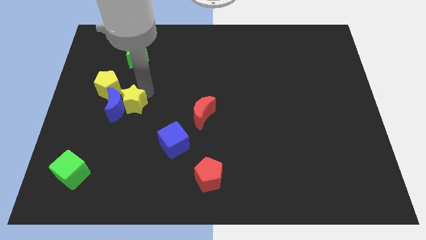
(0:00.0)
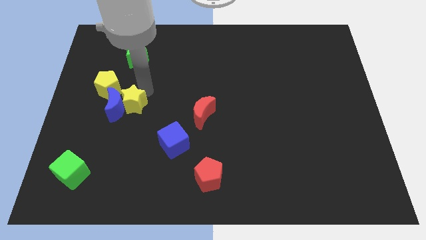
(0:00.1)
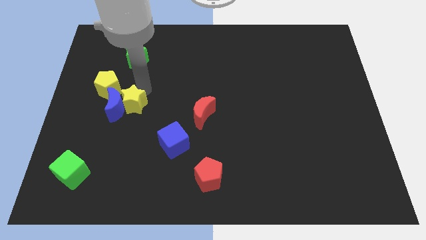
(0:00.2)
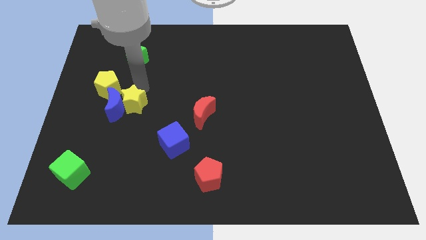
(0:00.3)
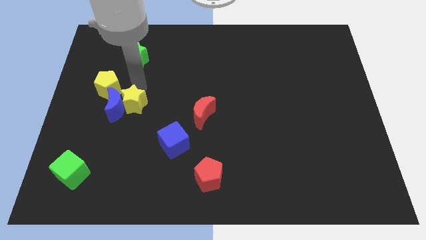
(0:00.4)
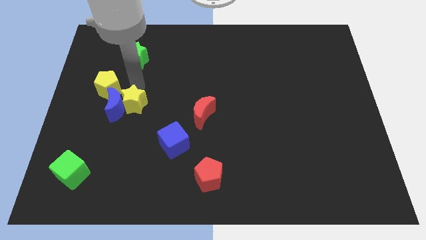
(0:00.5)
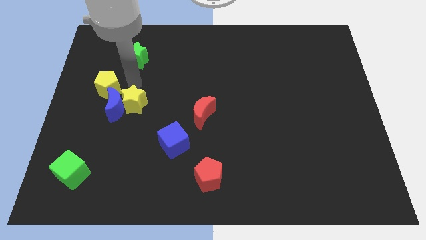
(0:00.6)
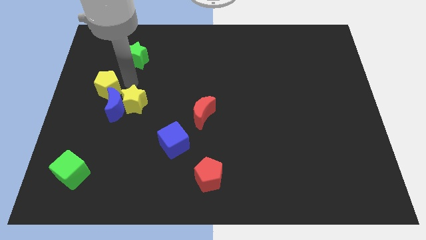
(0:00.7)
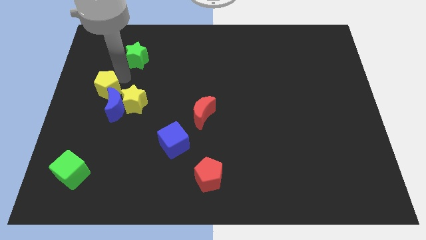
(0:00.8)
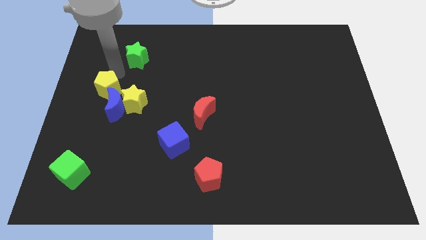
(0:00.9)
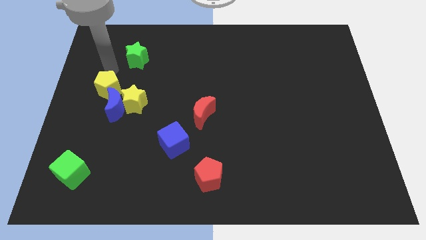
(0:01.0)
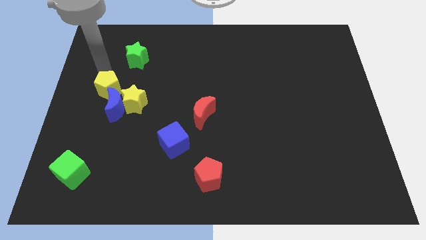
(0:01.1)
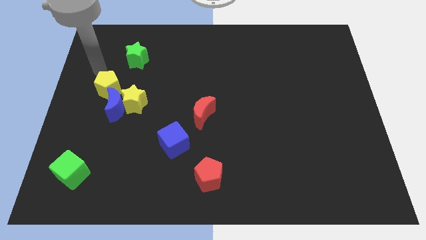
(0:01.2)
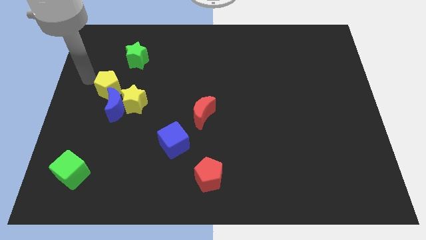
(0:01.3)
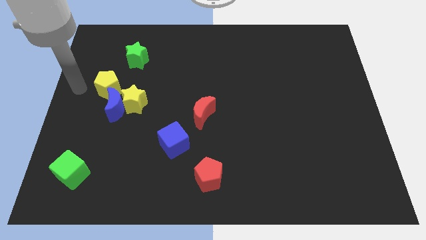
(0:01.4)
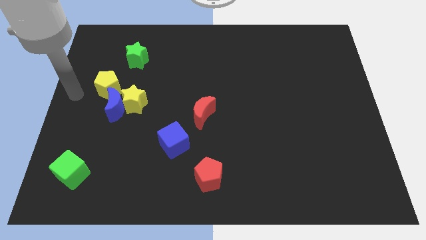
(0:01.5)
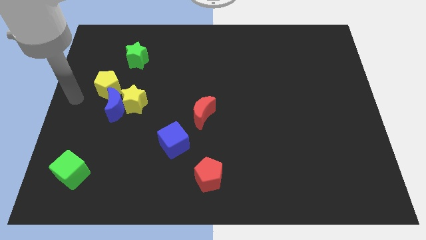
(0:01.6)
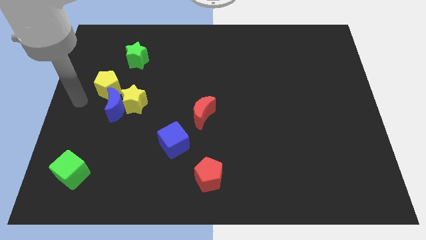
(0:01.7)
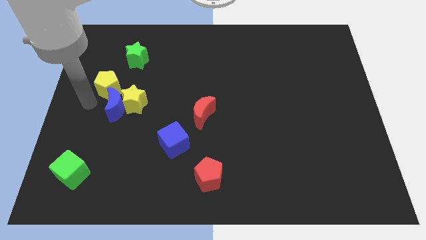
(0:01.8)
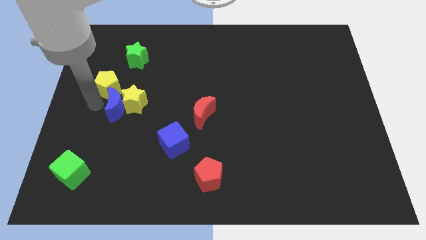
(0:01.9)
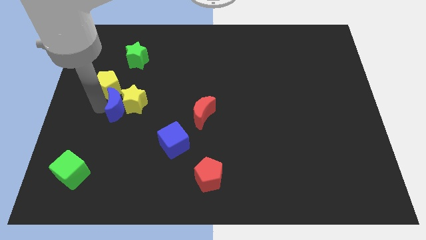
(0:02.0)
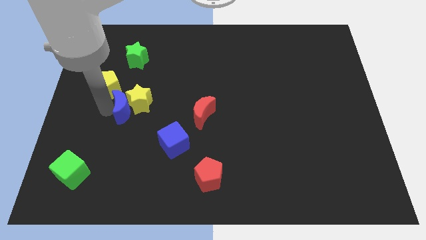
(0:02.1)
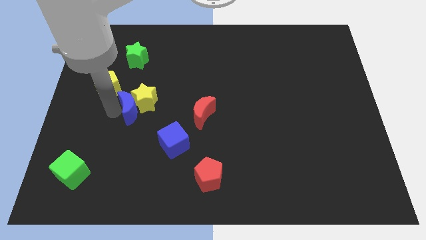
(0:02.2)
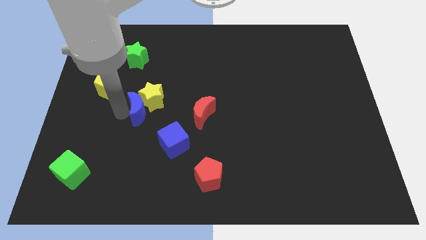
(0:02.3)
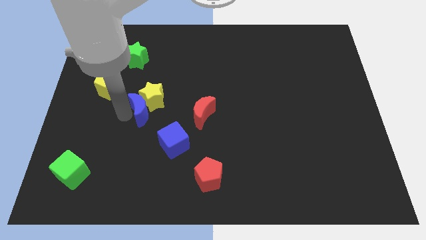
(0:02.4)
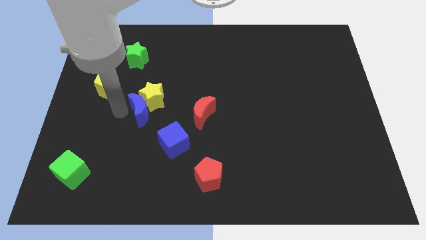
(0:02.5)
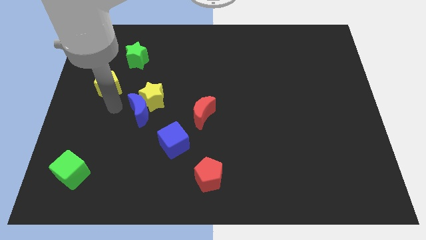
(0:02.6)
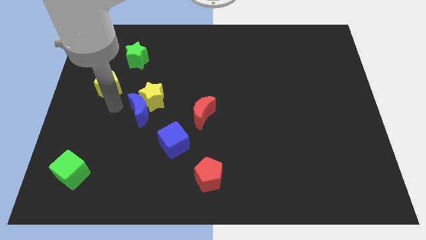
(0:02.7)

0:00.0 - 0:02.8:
push blue crescent slightly towards left

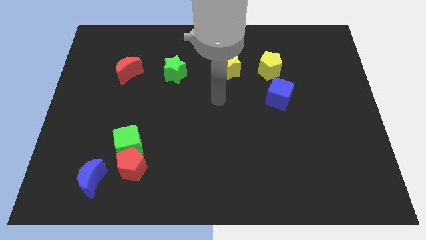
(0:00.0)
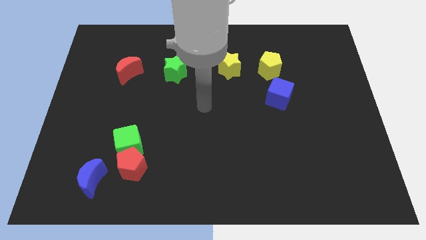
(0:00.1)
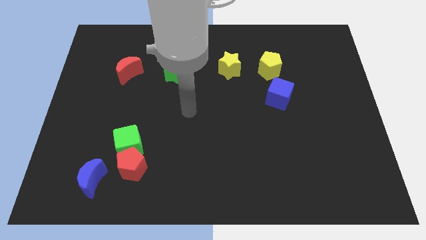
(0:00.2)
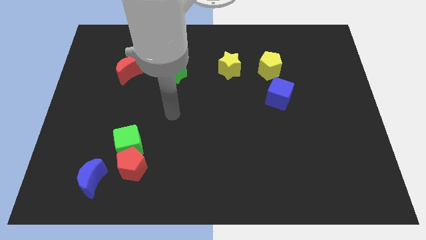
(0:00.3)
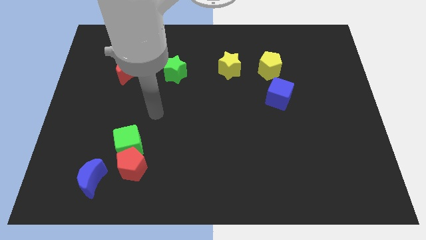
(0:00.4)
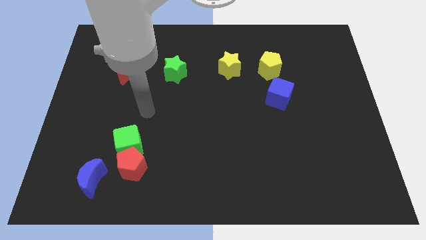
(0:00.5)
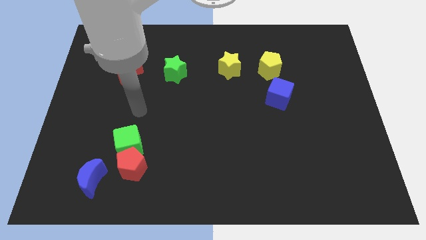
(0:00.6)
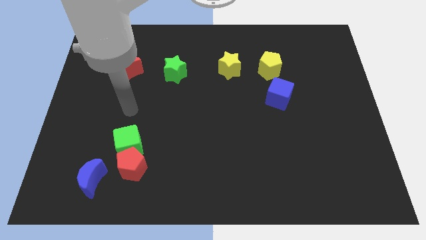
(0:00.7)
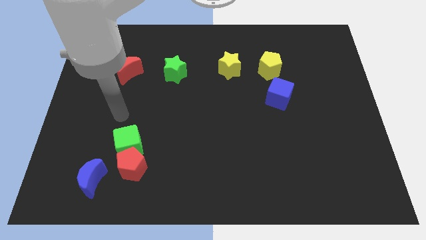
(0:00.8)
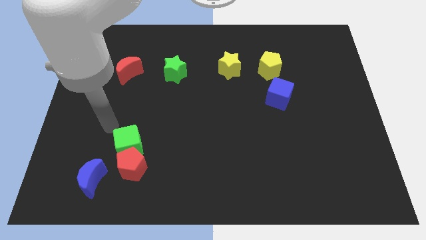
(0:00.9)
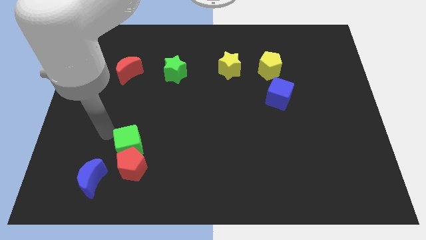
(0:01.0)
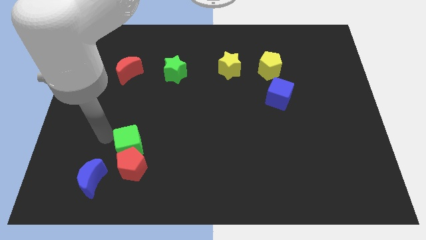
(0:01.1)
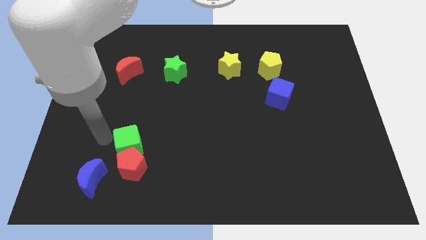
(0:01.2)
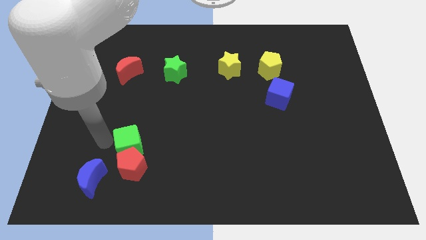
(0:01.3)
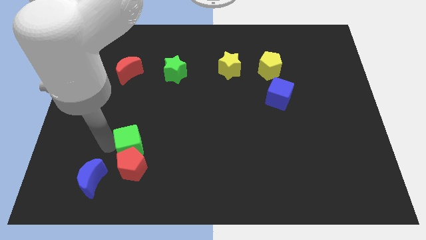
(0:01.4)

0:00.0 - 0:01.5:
move your arm to the left side of the green cube

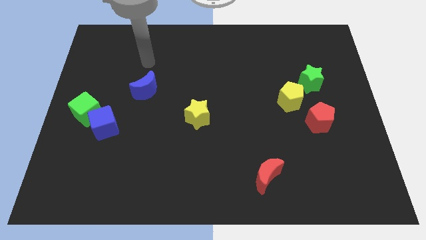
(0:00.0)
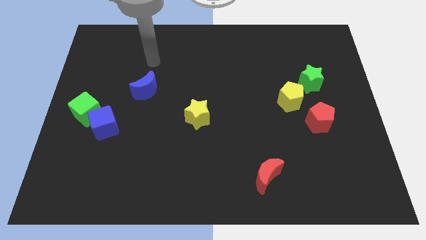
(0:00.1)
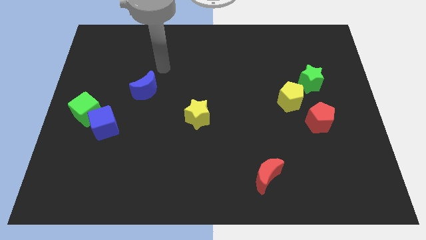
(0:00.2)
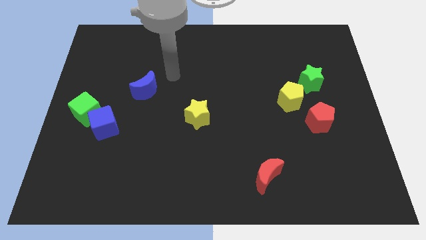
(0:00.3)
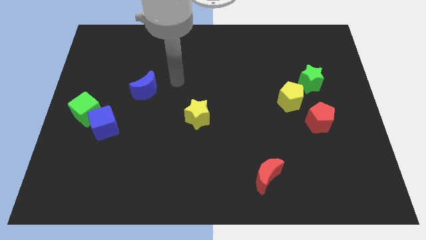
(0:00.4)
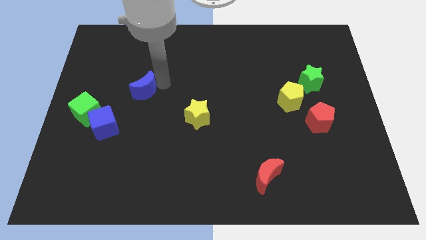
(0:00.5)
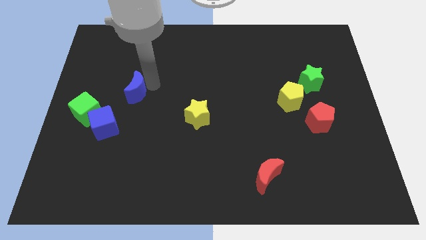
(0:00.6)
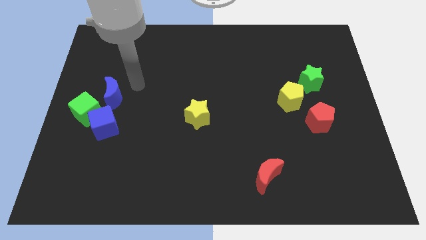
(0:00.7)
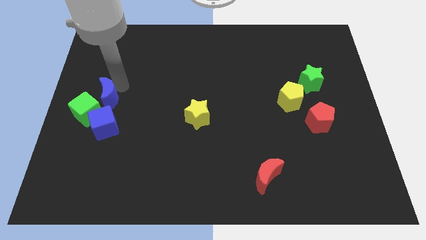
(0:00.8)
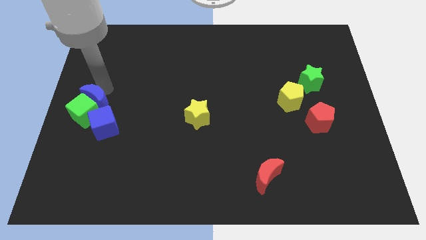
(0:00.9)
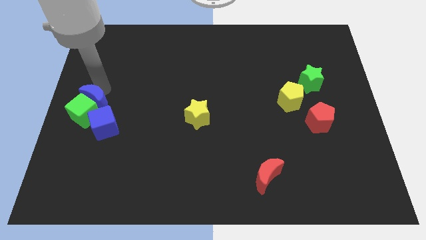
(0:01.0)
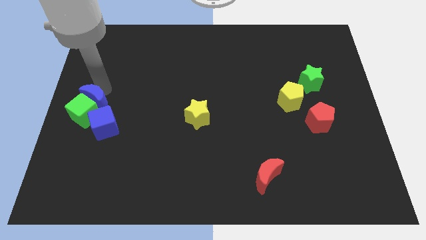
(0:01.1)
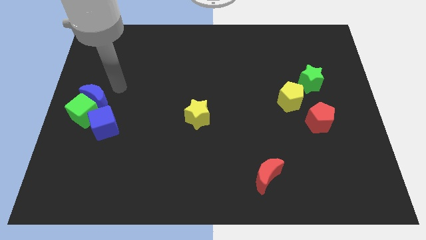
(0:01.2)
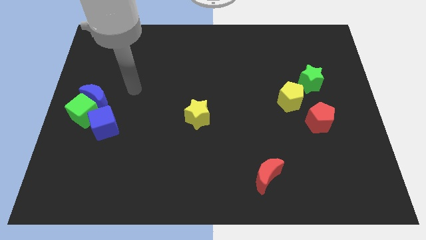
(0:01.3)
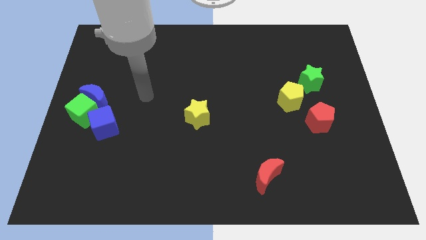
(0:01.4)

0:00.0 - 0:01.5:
move the blue crescent into the green cube

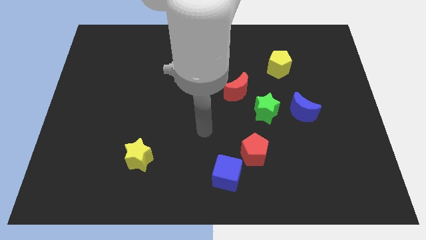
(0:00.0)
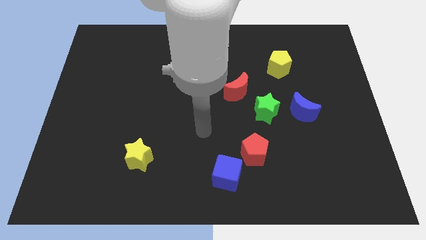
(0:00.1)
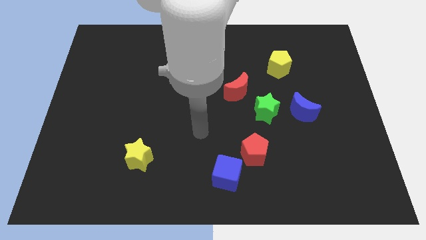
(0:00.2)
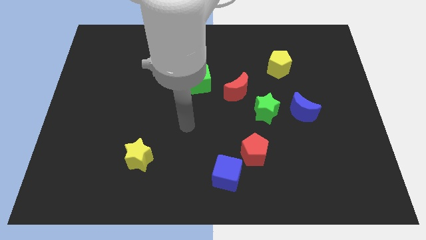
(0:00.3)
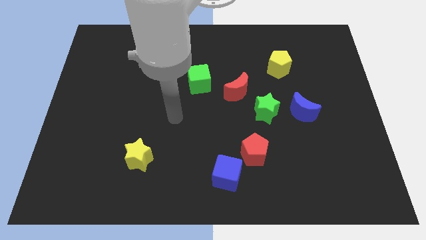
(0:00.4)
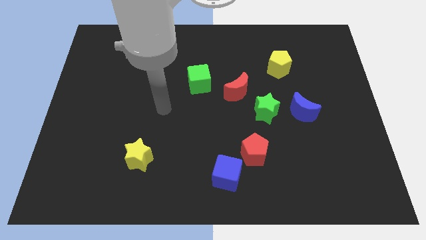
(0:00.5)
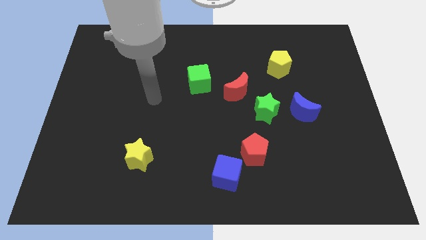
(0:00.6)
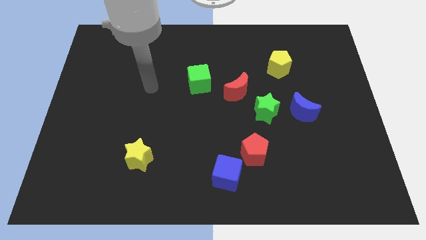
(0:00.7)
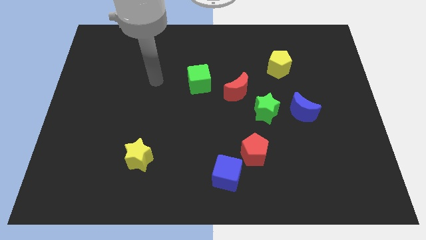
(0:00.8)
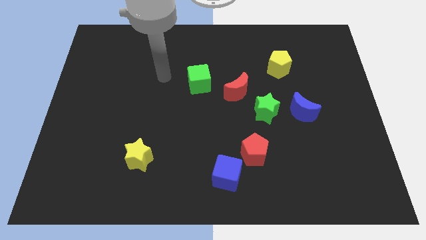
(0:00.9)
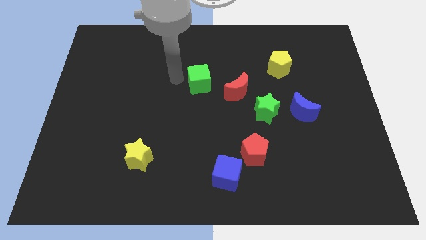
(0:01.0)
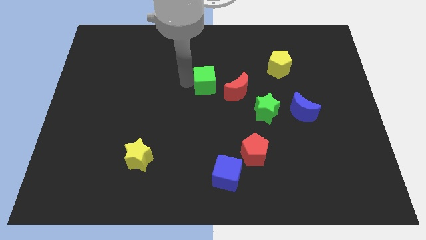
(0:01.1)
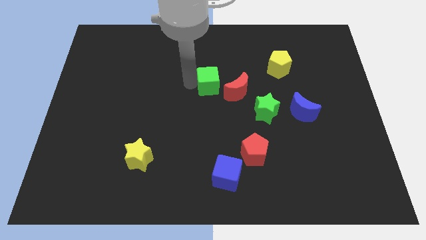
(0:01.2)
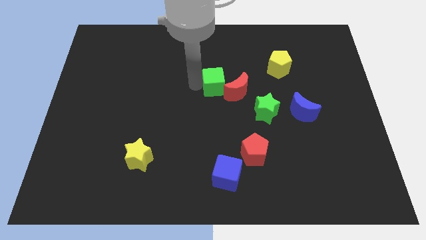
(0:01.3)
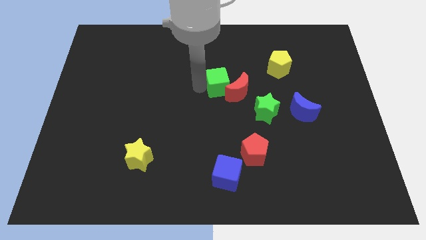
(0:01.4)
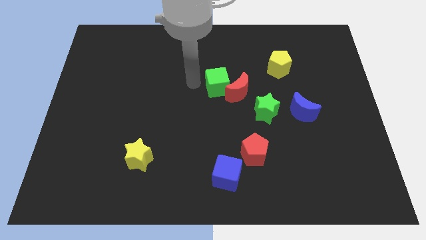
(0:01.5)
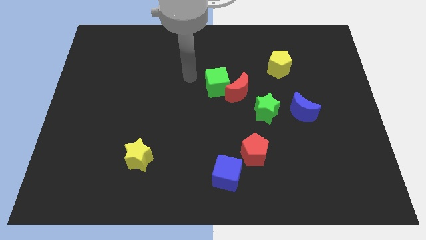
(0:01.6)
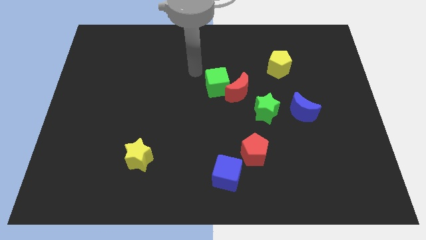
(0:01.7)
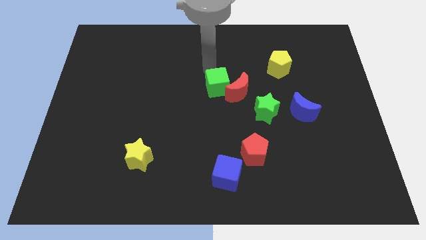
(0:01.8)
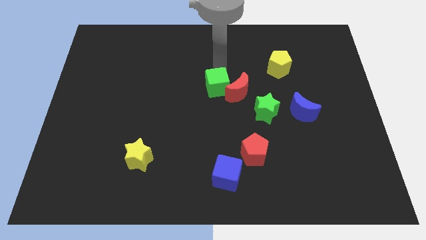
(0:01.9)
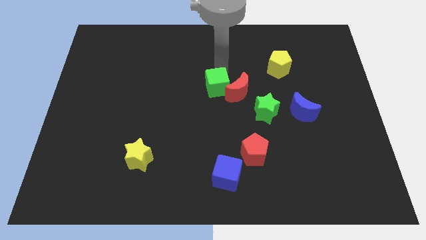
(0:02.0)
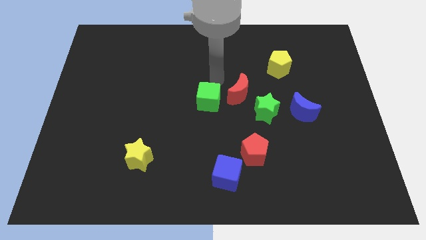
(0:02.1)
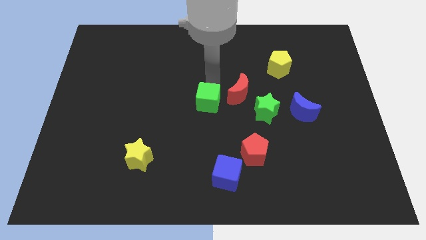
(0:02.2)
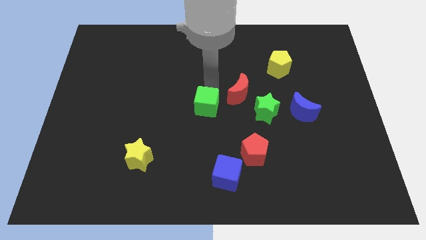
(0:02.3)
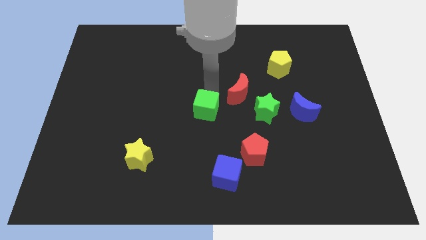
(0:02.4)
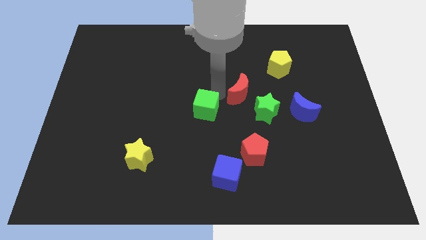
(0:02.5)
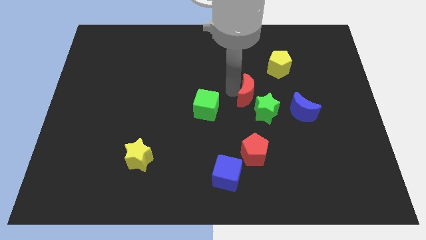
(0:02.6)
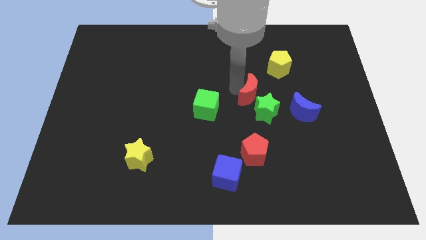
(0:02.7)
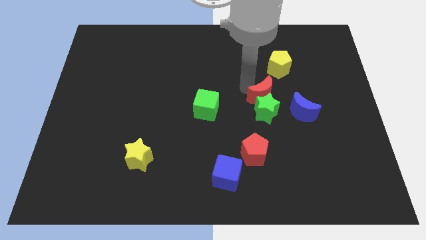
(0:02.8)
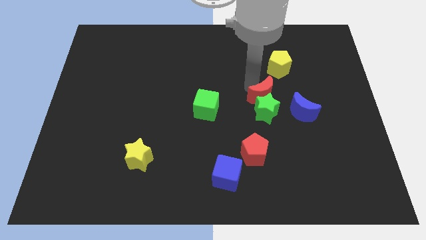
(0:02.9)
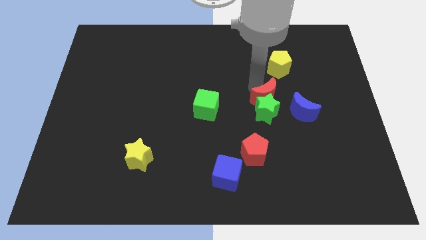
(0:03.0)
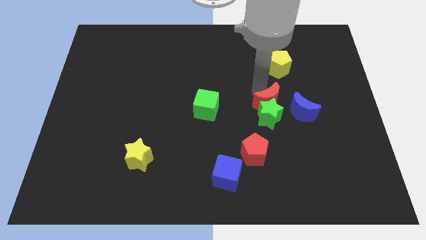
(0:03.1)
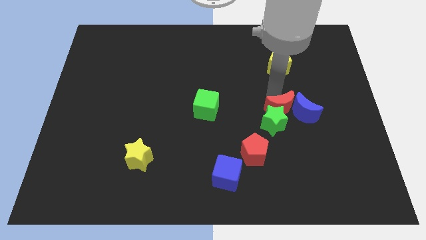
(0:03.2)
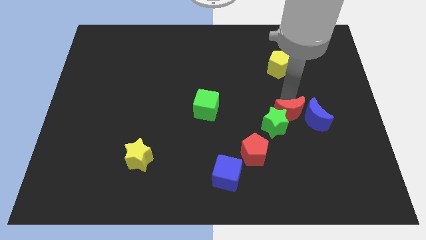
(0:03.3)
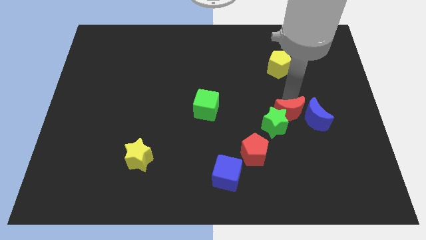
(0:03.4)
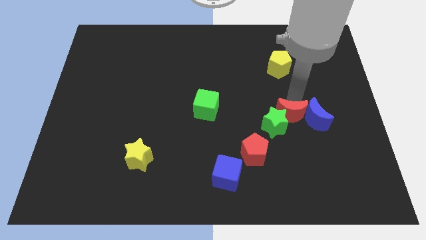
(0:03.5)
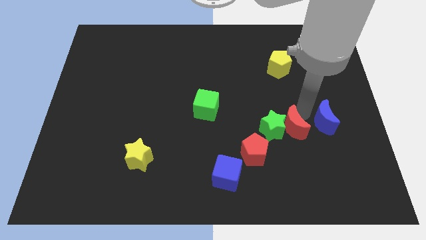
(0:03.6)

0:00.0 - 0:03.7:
place the green star and red moon parallel to each other
